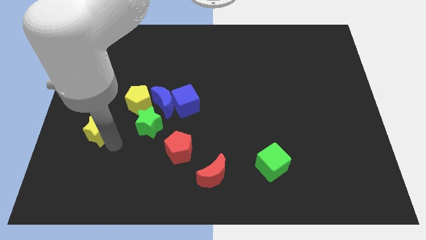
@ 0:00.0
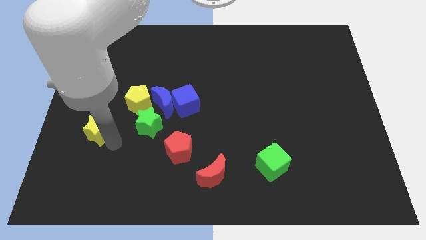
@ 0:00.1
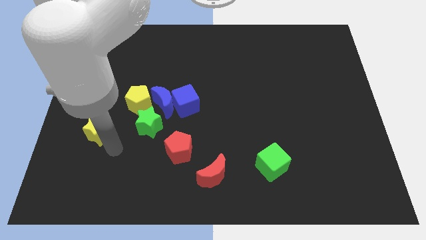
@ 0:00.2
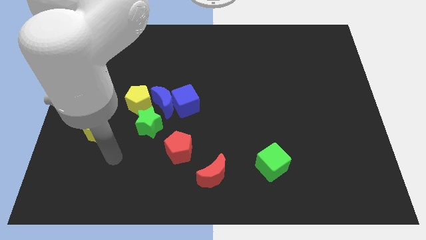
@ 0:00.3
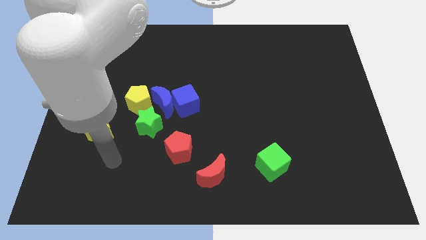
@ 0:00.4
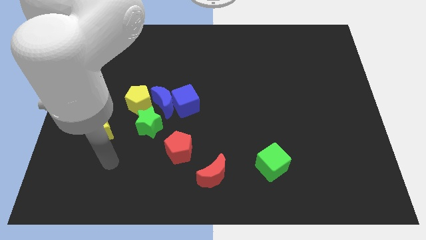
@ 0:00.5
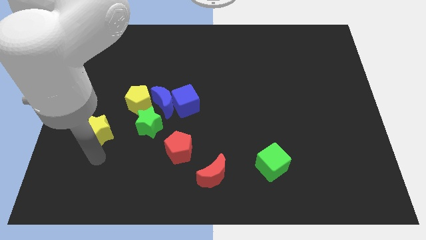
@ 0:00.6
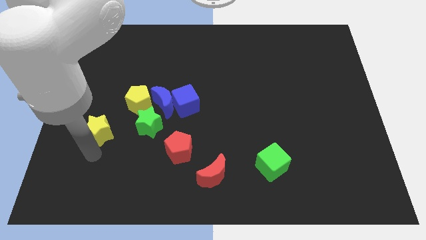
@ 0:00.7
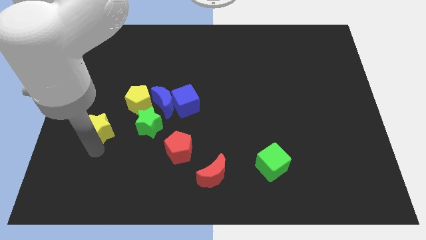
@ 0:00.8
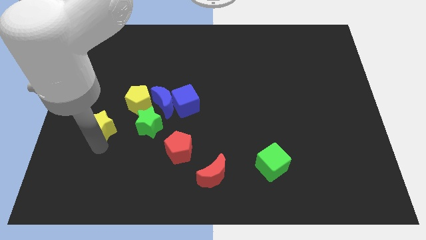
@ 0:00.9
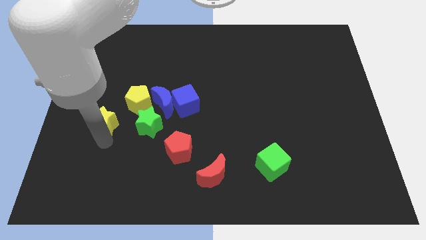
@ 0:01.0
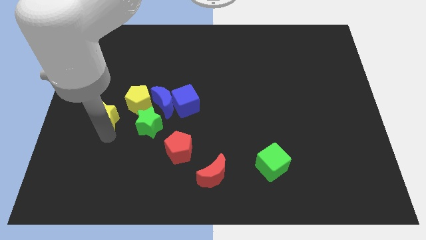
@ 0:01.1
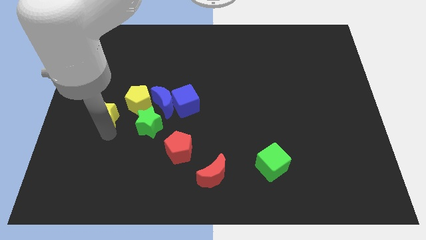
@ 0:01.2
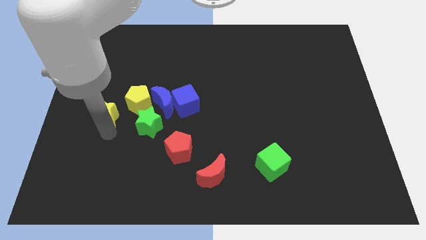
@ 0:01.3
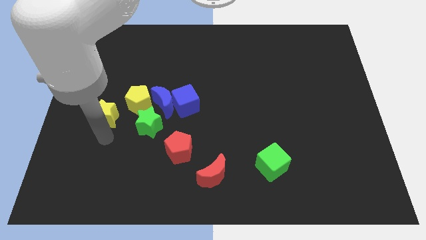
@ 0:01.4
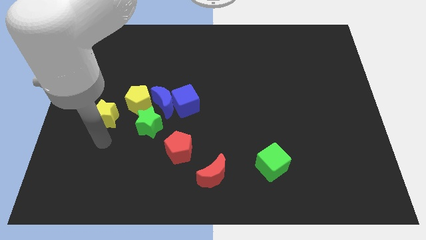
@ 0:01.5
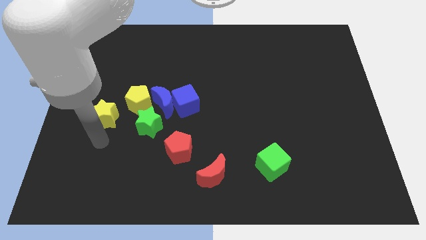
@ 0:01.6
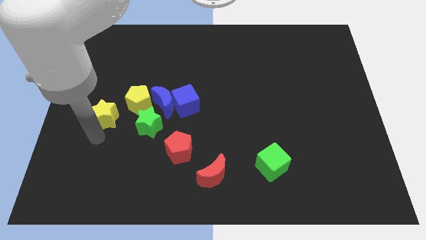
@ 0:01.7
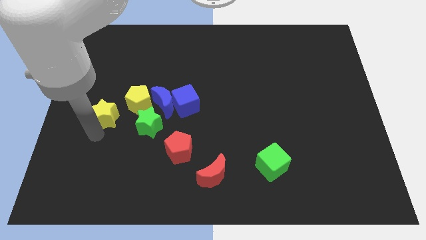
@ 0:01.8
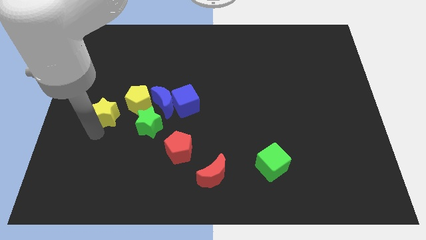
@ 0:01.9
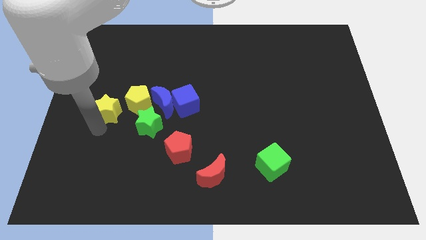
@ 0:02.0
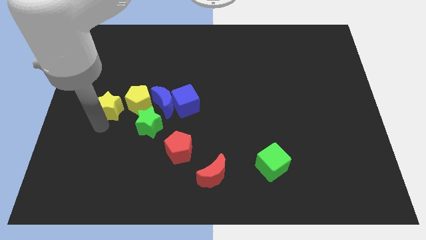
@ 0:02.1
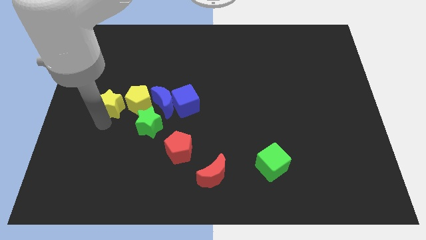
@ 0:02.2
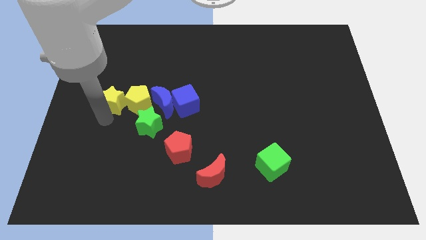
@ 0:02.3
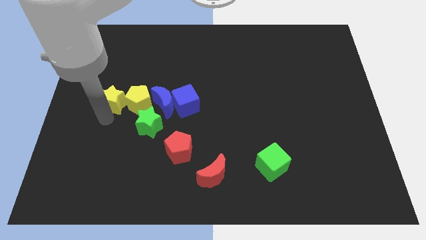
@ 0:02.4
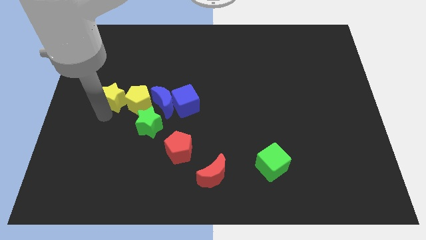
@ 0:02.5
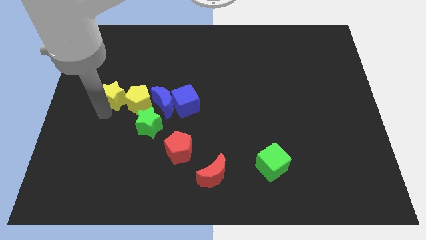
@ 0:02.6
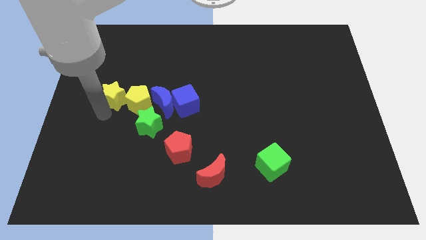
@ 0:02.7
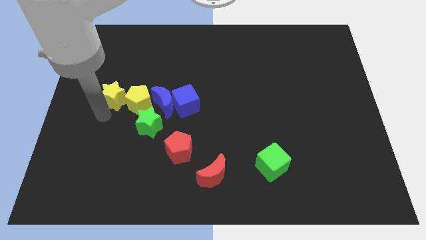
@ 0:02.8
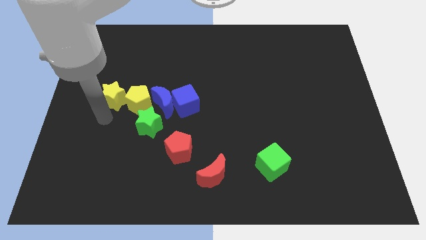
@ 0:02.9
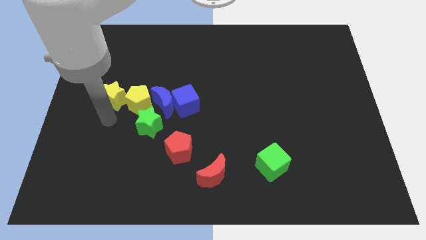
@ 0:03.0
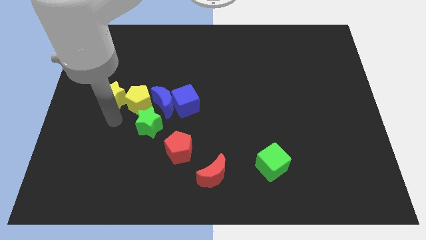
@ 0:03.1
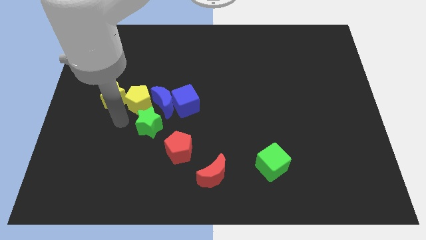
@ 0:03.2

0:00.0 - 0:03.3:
place the yellow star to the left of yellow pentagon

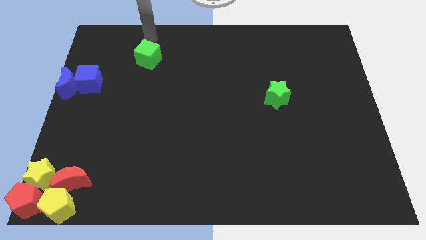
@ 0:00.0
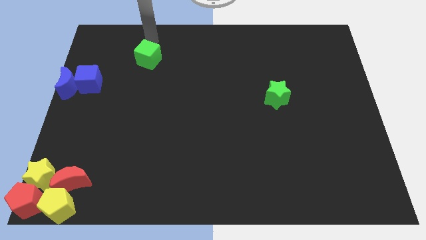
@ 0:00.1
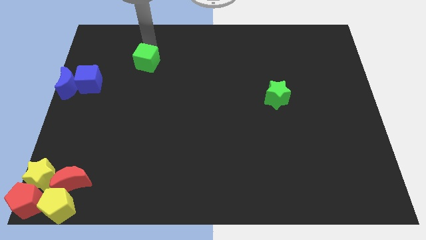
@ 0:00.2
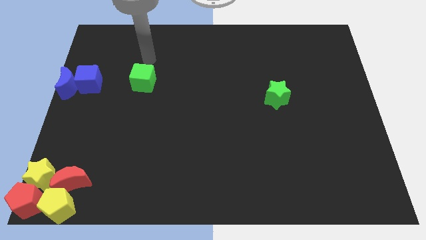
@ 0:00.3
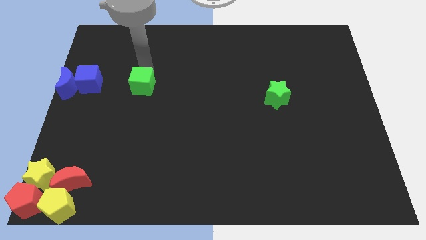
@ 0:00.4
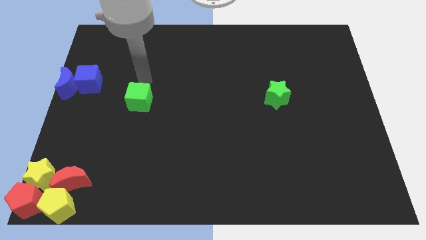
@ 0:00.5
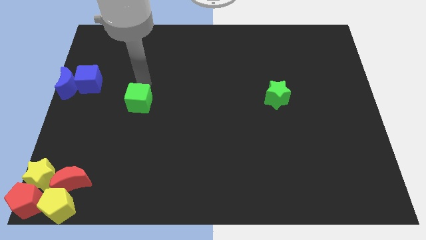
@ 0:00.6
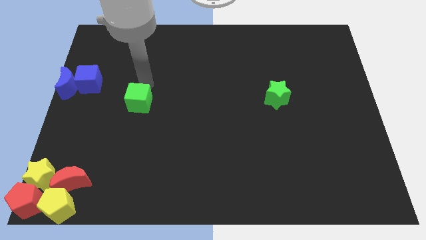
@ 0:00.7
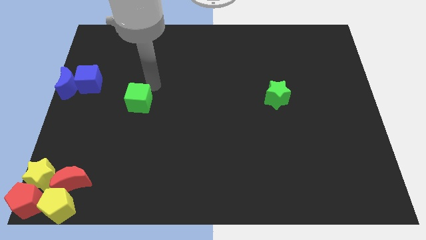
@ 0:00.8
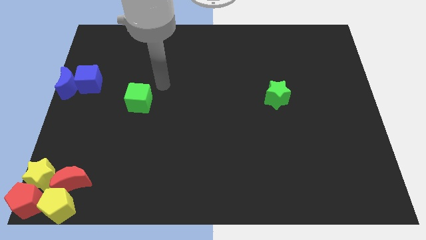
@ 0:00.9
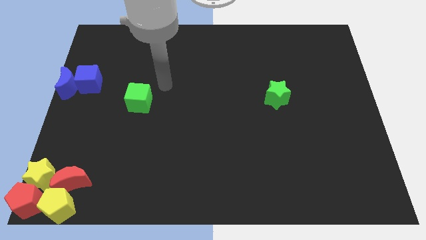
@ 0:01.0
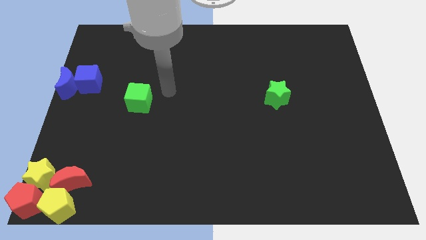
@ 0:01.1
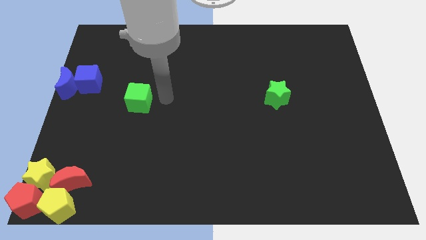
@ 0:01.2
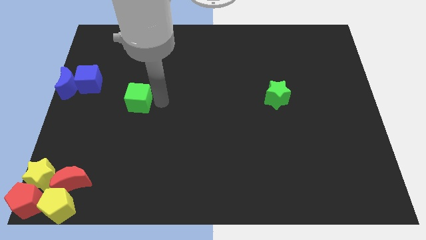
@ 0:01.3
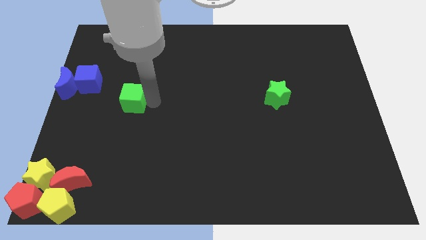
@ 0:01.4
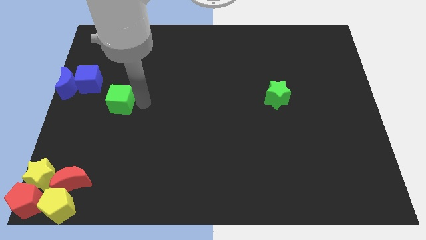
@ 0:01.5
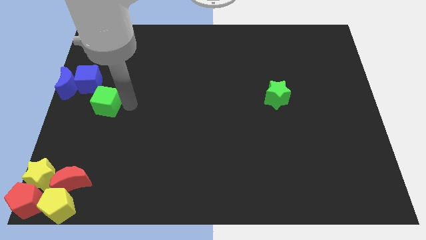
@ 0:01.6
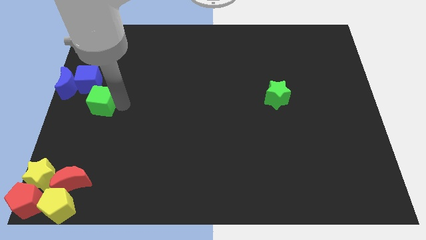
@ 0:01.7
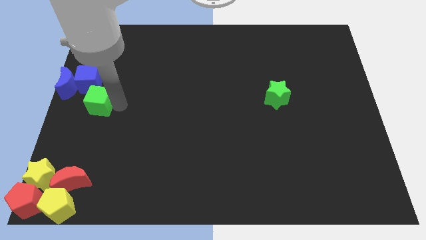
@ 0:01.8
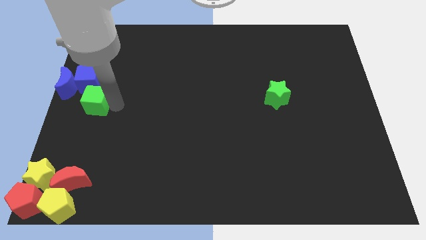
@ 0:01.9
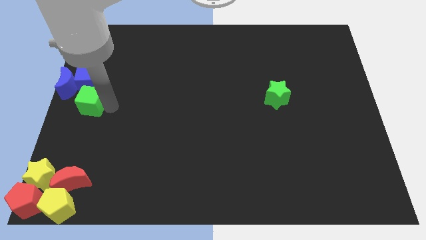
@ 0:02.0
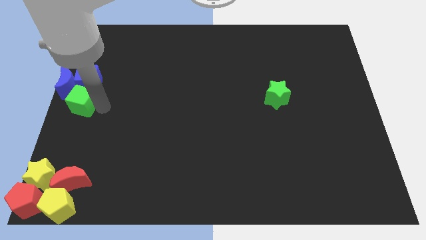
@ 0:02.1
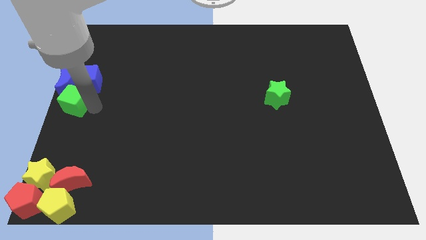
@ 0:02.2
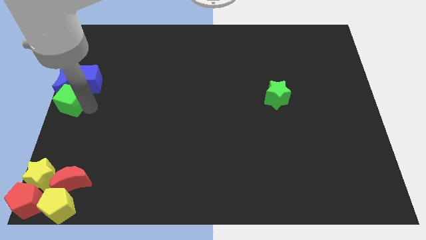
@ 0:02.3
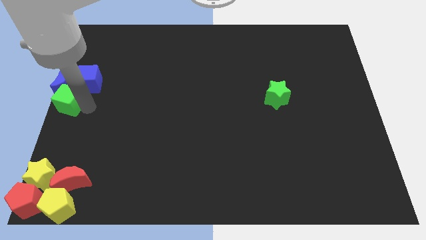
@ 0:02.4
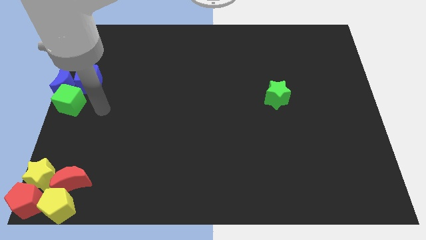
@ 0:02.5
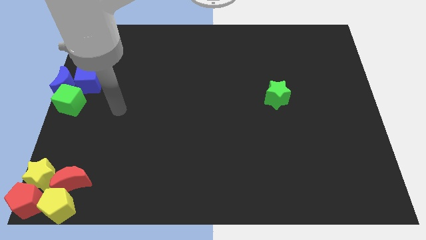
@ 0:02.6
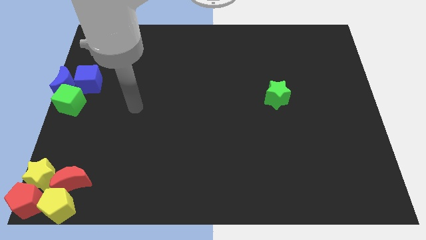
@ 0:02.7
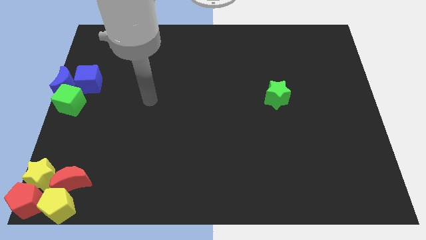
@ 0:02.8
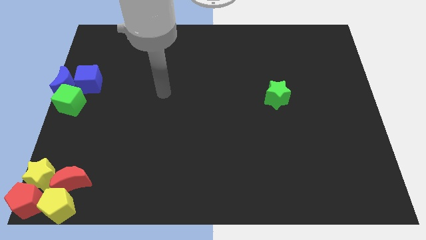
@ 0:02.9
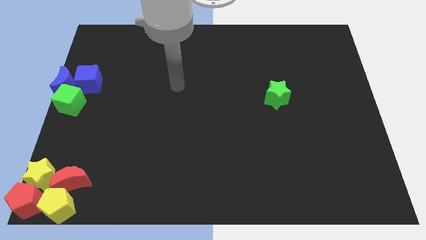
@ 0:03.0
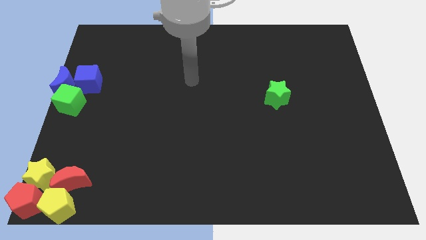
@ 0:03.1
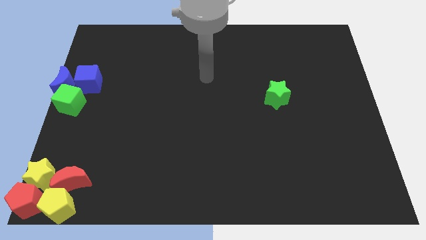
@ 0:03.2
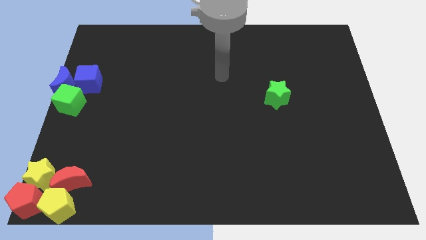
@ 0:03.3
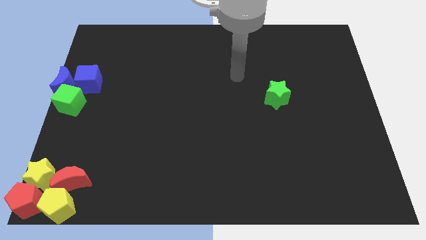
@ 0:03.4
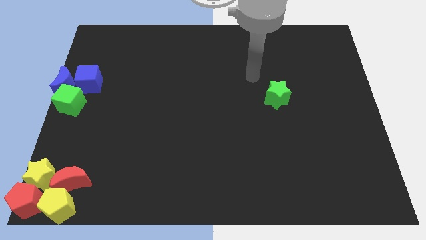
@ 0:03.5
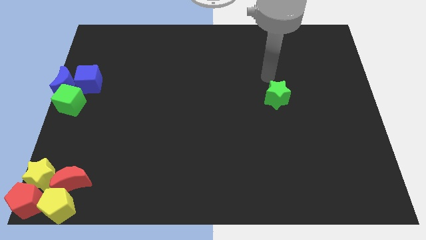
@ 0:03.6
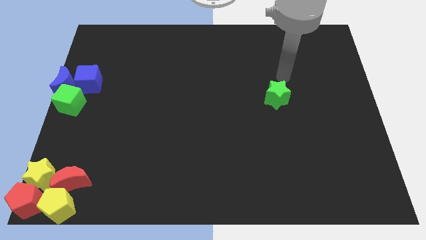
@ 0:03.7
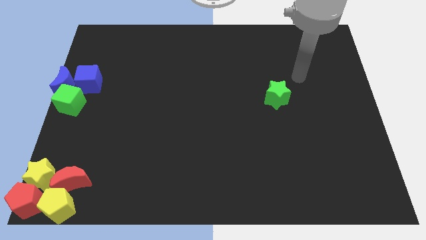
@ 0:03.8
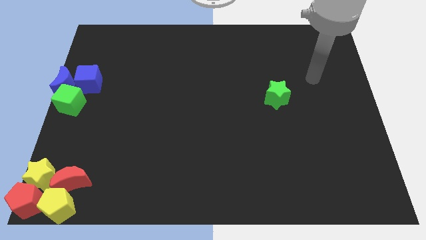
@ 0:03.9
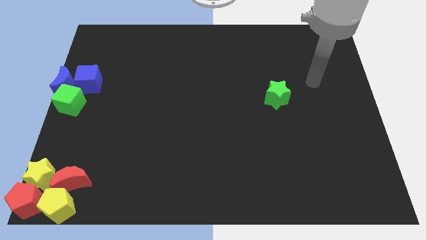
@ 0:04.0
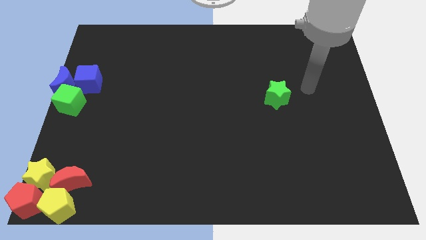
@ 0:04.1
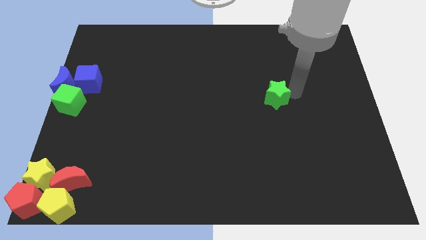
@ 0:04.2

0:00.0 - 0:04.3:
move the green cube to the left center of the board

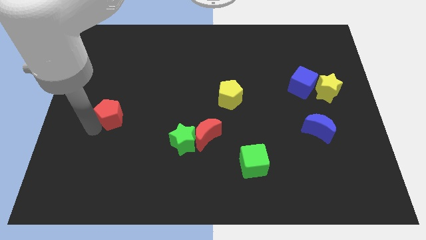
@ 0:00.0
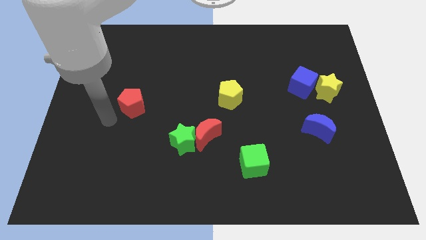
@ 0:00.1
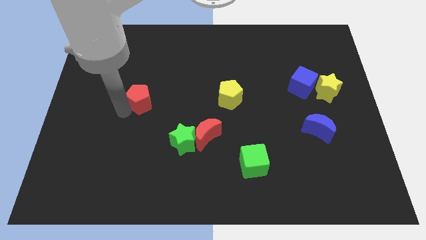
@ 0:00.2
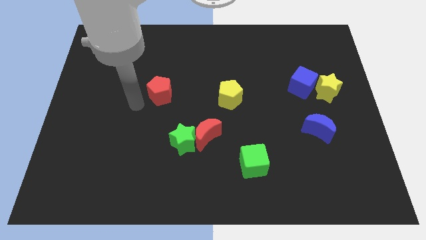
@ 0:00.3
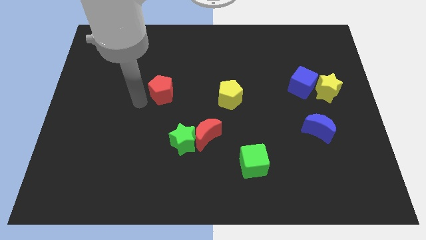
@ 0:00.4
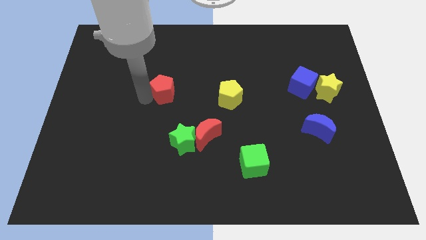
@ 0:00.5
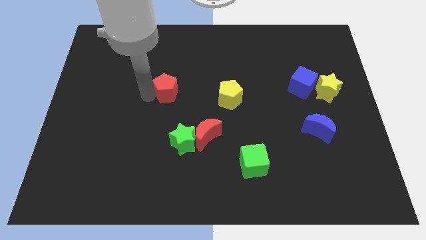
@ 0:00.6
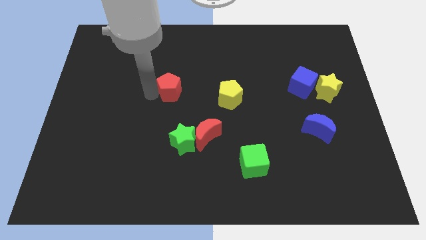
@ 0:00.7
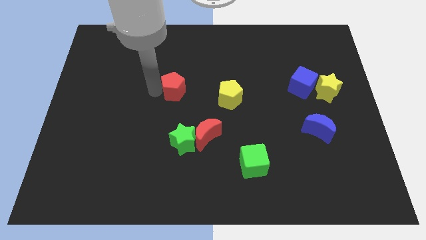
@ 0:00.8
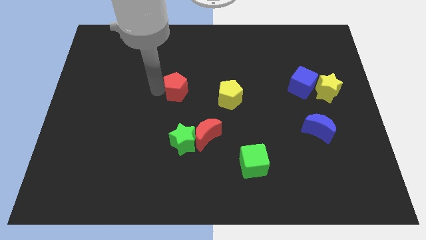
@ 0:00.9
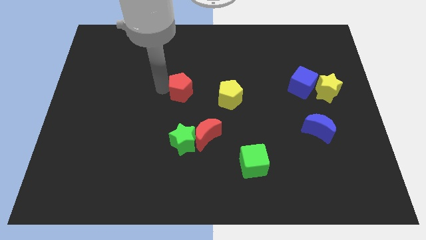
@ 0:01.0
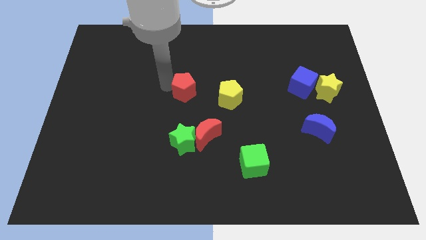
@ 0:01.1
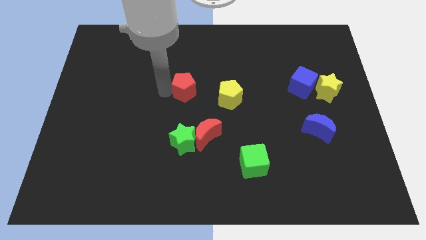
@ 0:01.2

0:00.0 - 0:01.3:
drag the red pentagon towards the left side of the yellow pentagon

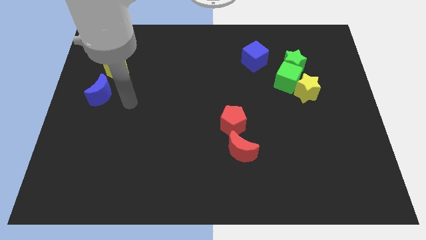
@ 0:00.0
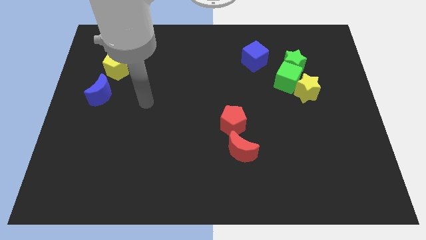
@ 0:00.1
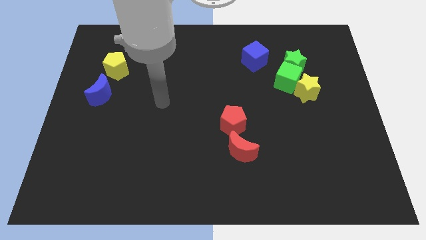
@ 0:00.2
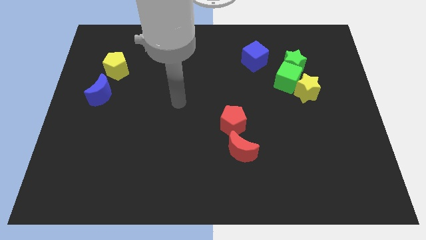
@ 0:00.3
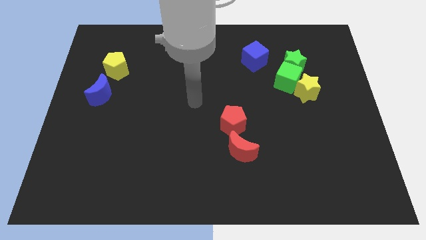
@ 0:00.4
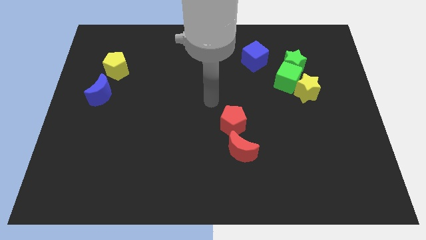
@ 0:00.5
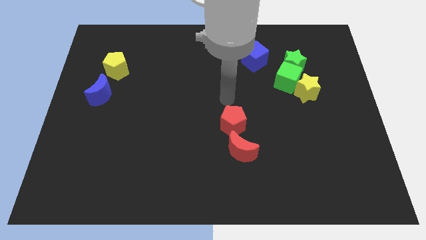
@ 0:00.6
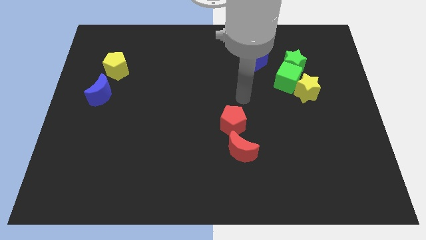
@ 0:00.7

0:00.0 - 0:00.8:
point your arm at the top of the red pentagon
